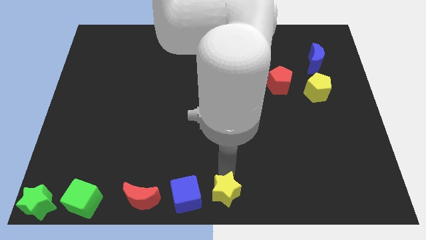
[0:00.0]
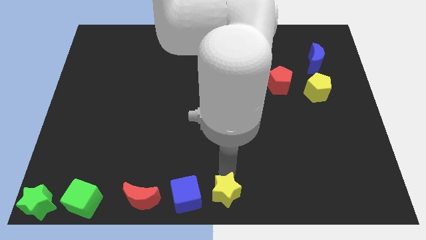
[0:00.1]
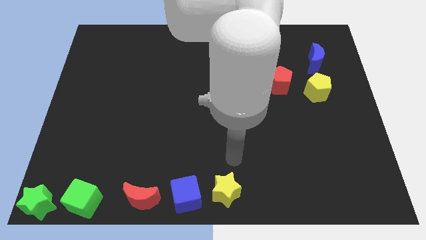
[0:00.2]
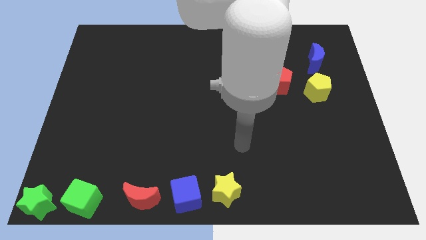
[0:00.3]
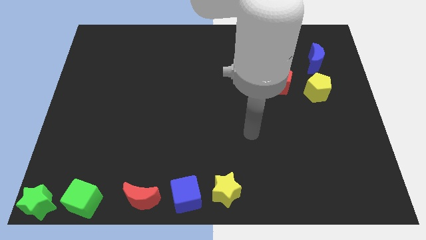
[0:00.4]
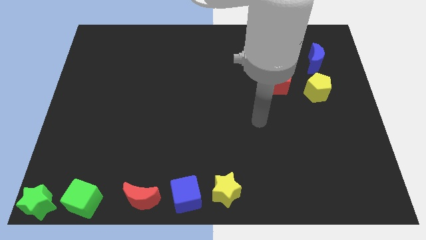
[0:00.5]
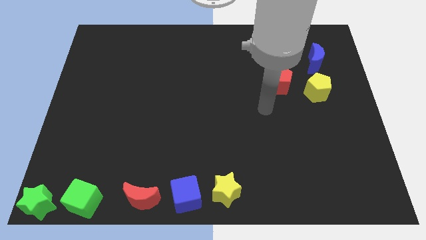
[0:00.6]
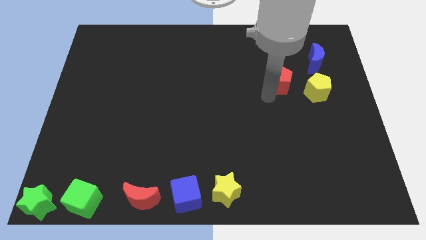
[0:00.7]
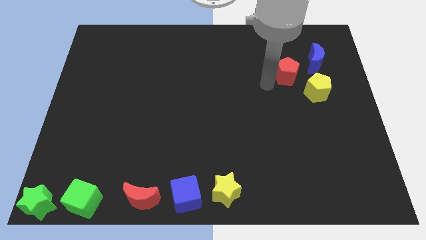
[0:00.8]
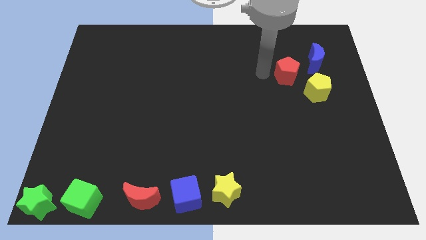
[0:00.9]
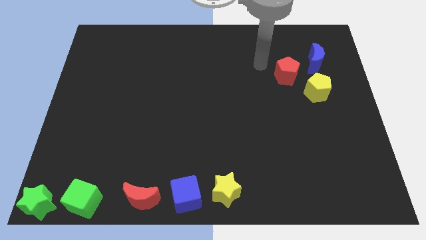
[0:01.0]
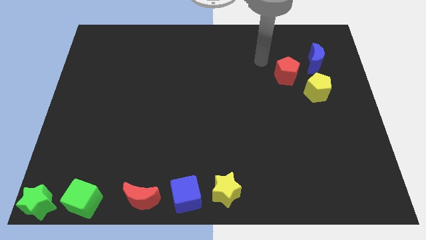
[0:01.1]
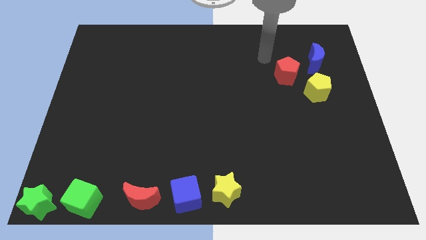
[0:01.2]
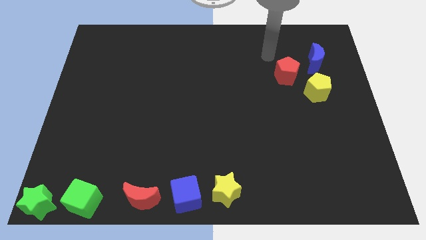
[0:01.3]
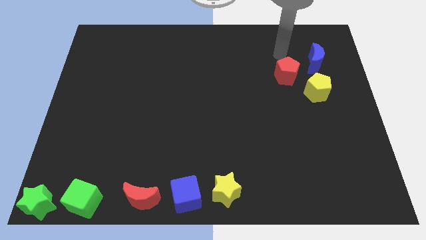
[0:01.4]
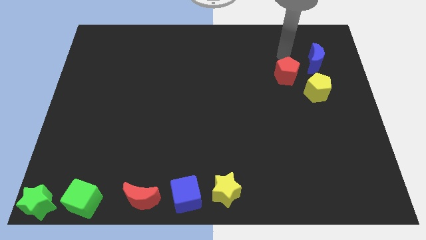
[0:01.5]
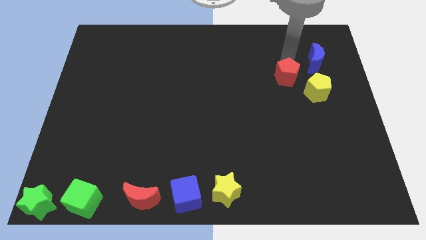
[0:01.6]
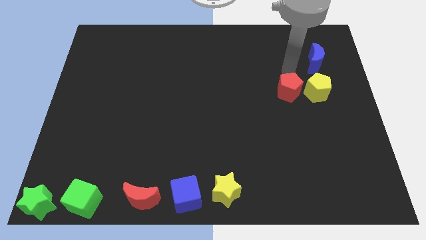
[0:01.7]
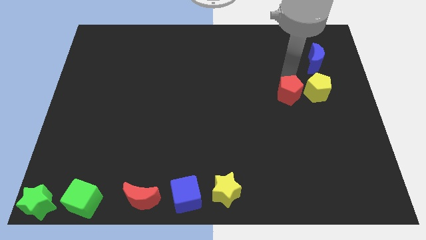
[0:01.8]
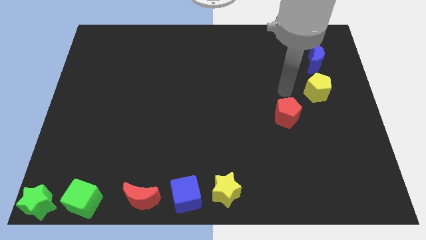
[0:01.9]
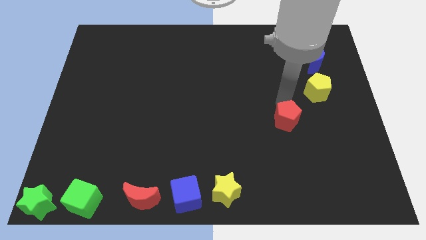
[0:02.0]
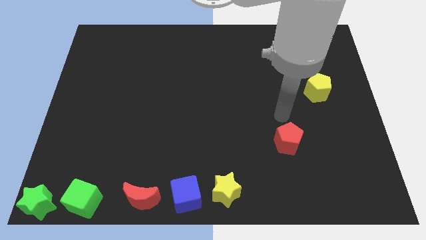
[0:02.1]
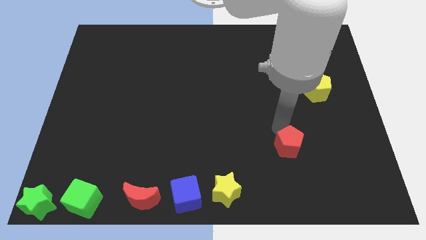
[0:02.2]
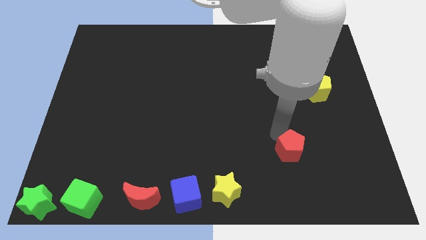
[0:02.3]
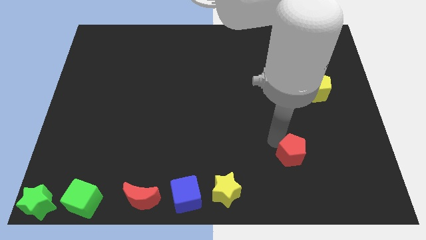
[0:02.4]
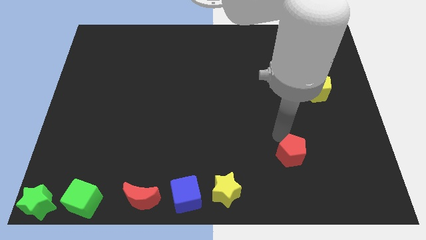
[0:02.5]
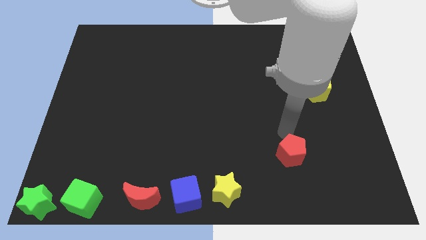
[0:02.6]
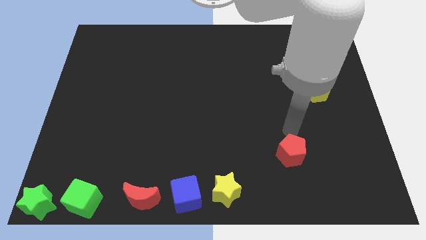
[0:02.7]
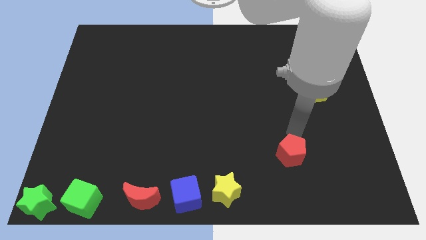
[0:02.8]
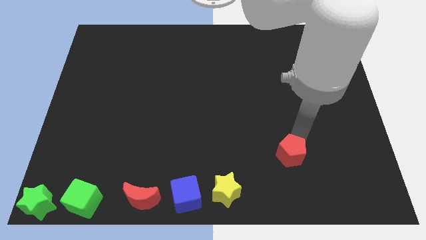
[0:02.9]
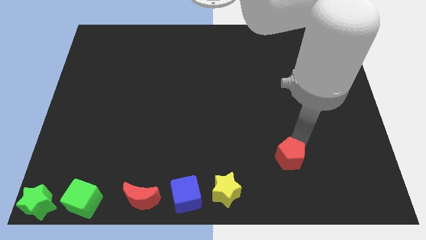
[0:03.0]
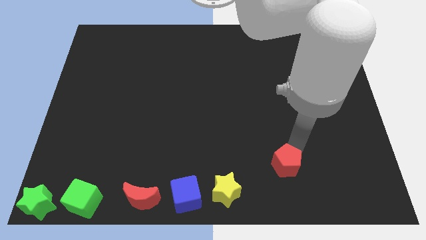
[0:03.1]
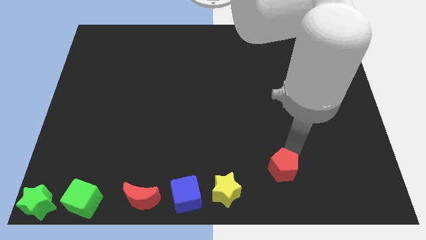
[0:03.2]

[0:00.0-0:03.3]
slide the red pentagon towards the right side of the yellow star

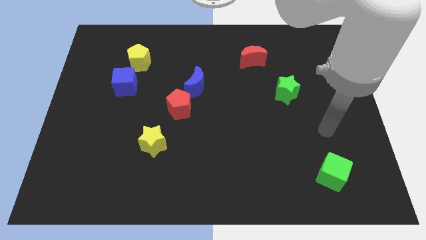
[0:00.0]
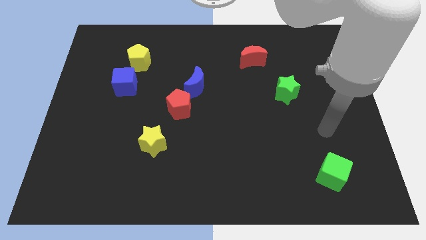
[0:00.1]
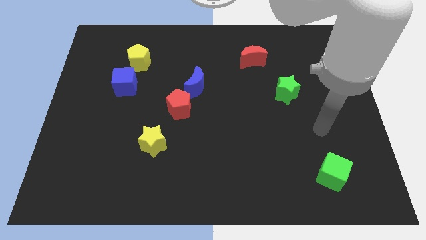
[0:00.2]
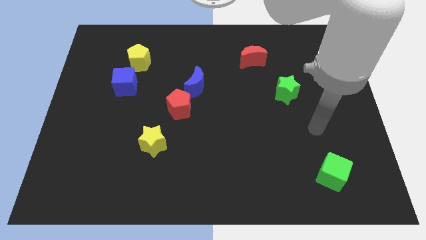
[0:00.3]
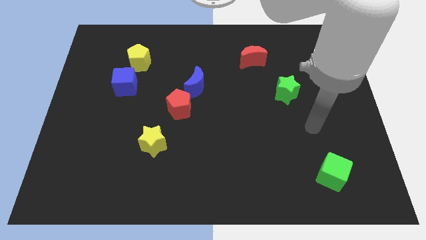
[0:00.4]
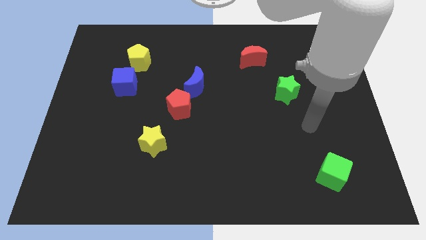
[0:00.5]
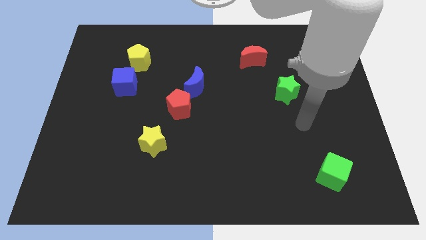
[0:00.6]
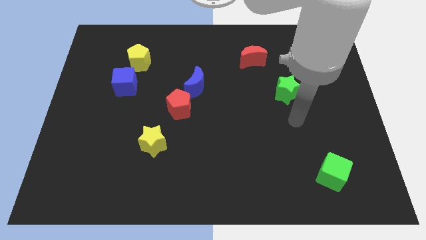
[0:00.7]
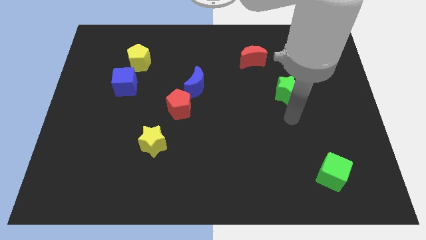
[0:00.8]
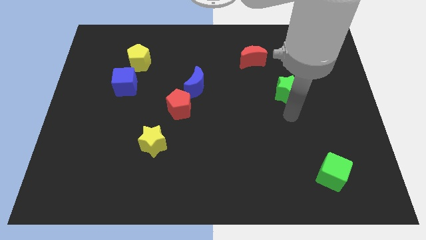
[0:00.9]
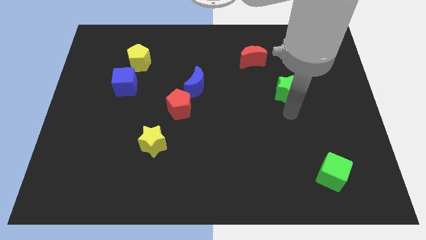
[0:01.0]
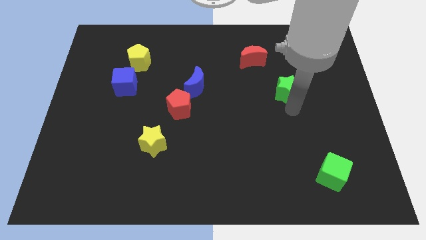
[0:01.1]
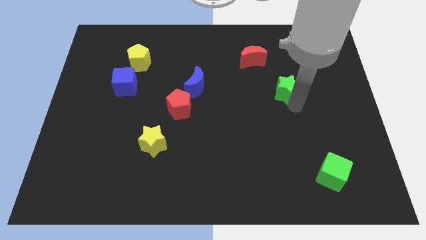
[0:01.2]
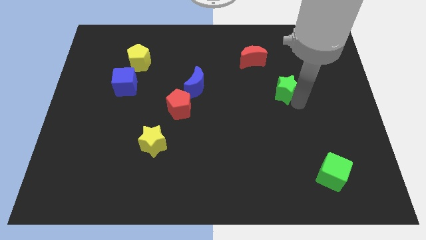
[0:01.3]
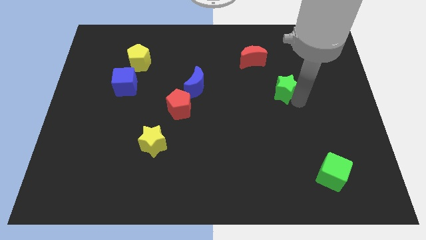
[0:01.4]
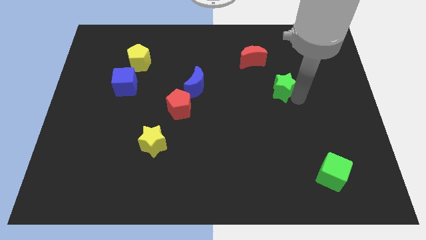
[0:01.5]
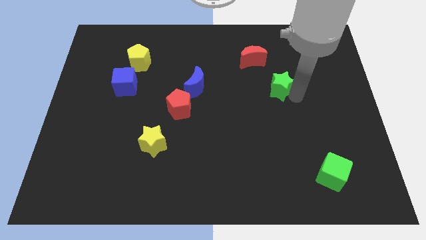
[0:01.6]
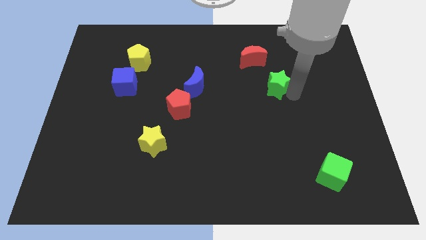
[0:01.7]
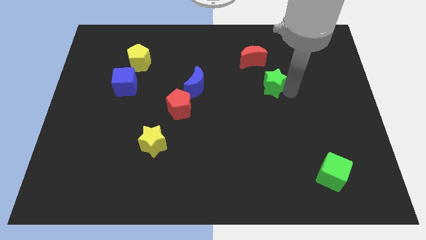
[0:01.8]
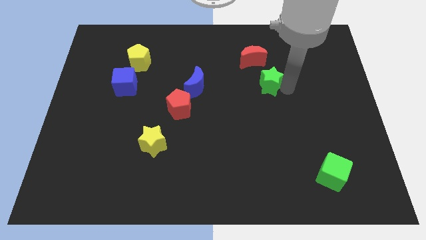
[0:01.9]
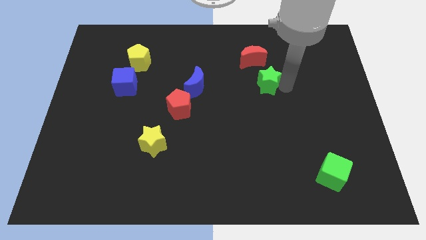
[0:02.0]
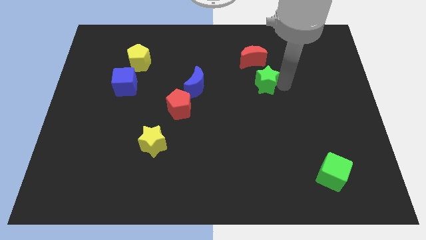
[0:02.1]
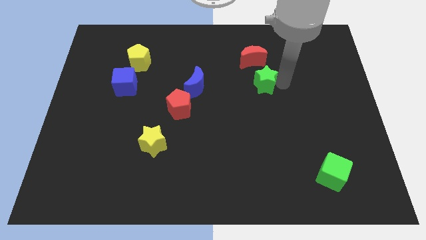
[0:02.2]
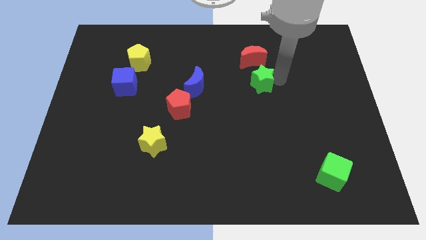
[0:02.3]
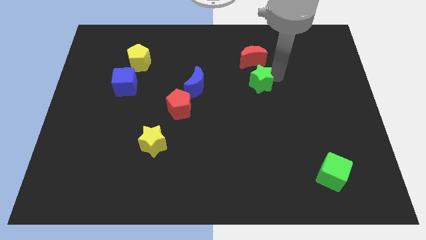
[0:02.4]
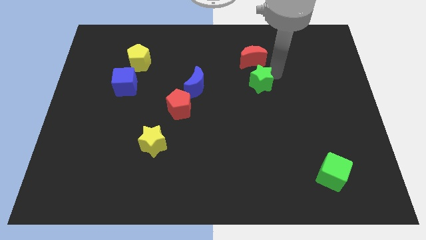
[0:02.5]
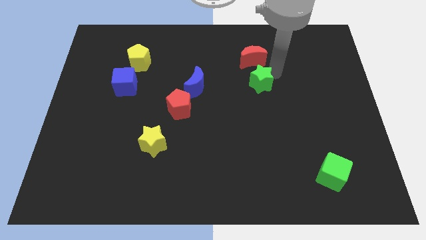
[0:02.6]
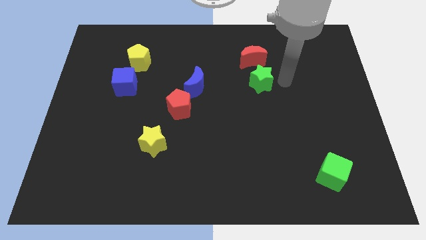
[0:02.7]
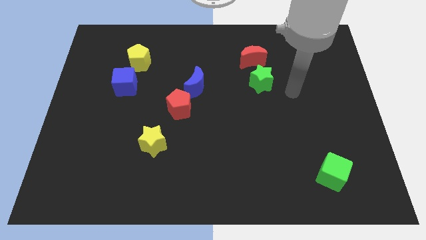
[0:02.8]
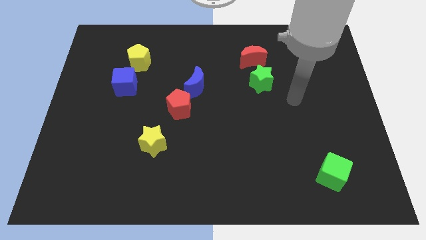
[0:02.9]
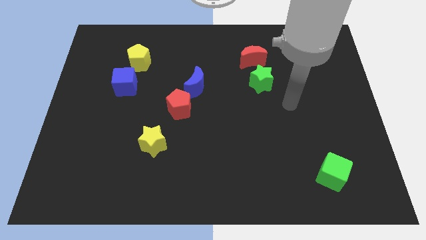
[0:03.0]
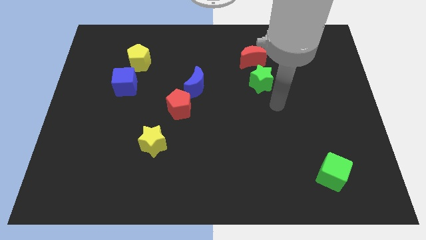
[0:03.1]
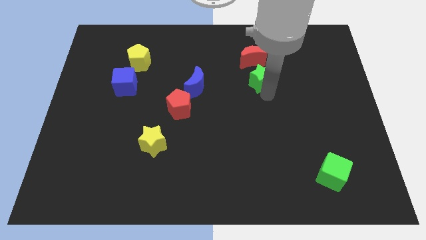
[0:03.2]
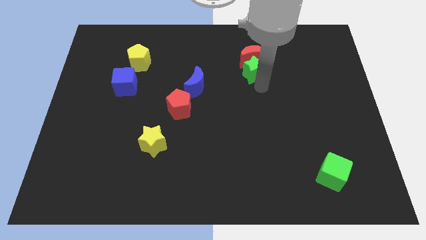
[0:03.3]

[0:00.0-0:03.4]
move green star below the red moon

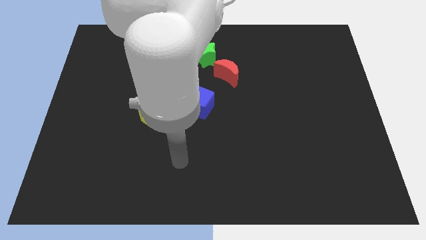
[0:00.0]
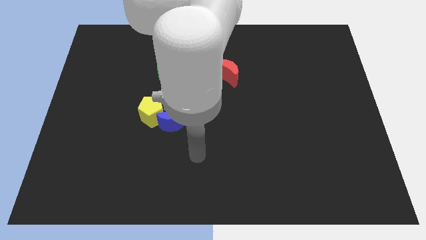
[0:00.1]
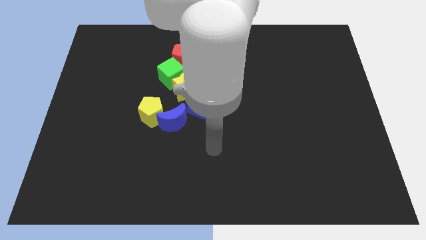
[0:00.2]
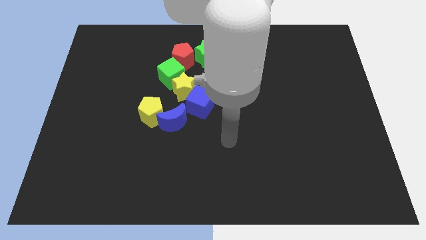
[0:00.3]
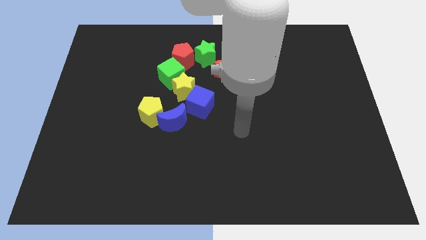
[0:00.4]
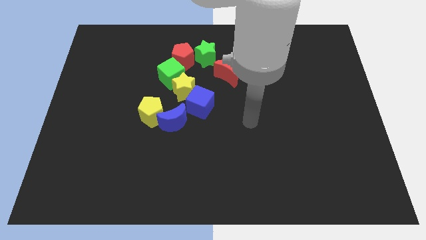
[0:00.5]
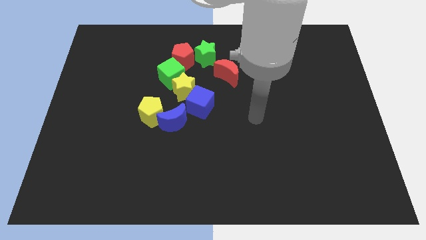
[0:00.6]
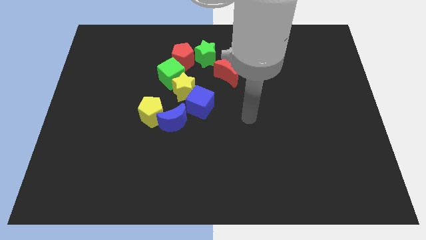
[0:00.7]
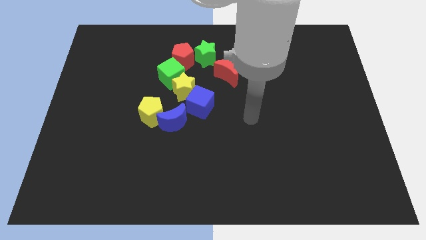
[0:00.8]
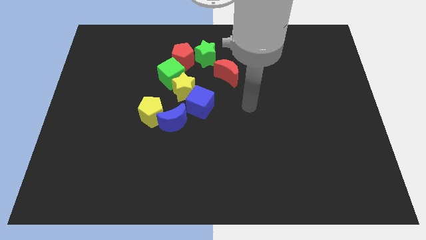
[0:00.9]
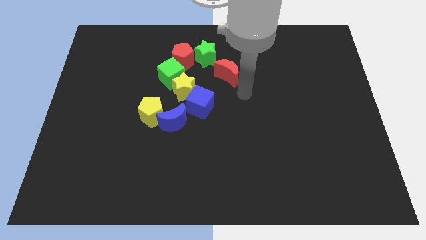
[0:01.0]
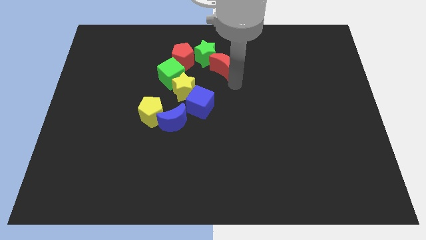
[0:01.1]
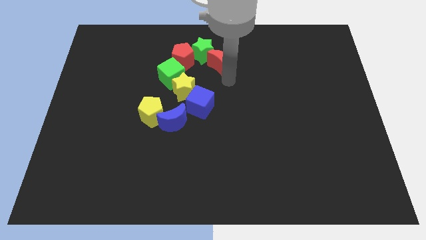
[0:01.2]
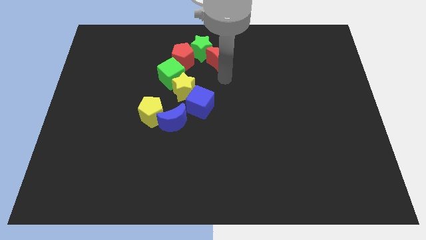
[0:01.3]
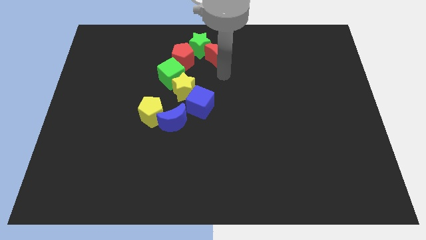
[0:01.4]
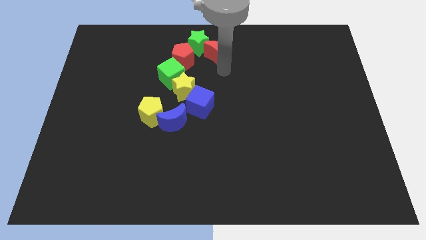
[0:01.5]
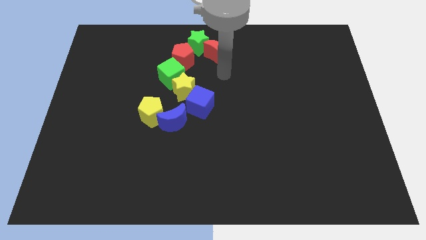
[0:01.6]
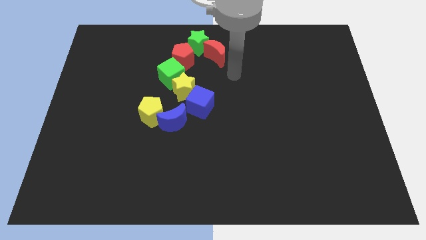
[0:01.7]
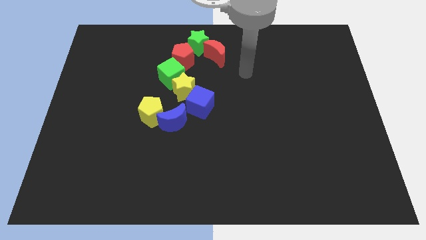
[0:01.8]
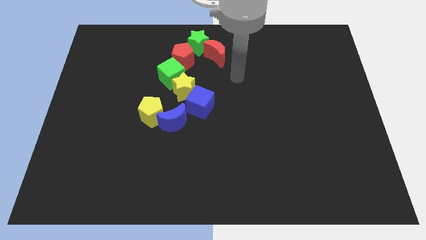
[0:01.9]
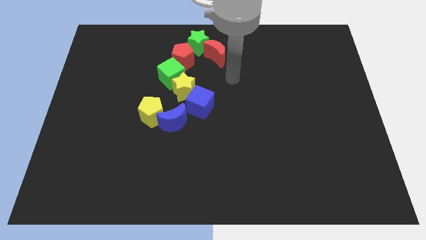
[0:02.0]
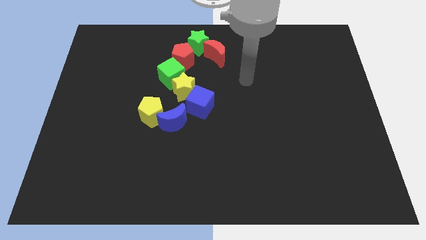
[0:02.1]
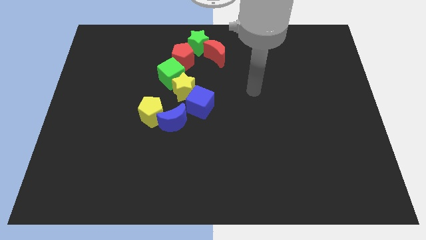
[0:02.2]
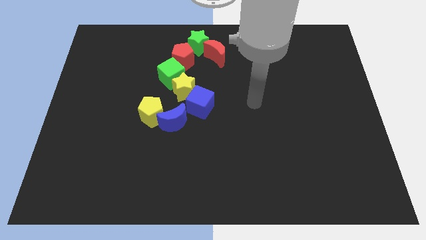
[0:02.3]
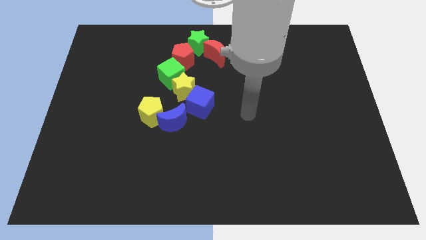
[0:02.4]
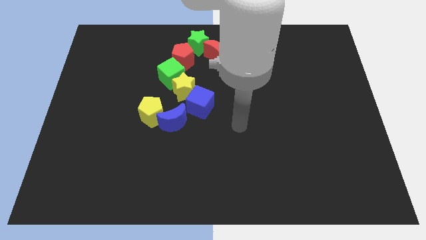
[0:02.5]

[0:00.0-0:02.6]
slightly move the red moon towards up
